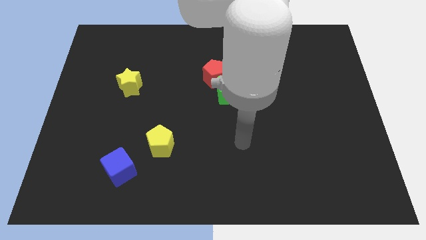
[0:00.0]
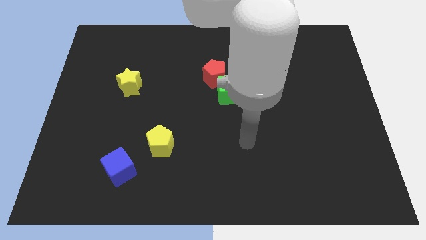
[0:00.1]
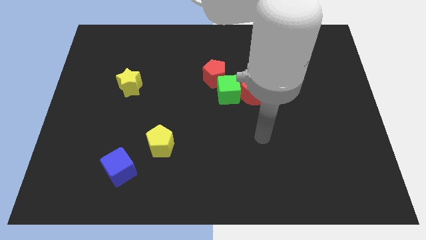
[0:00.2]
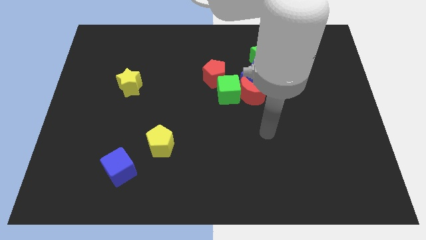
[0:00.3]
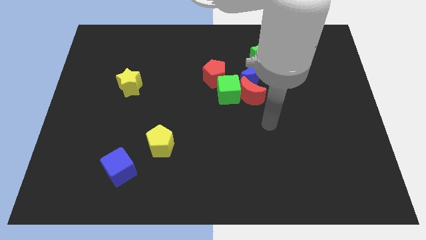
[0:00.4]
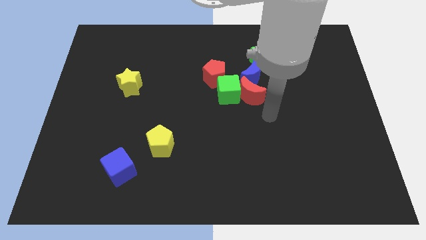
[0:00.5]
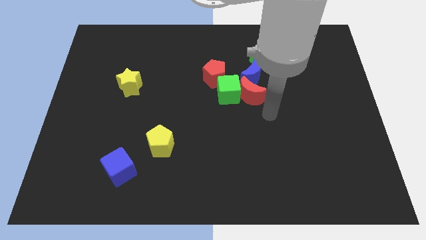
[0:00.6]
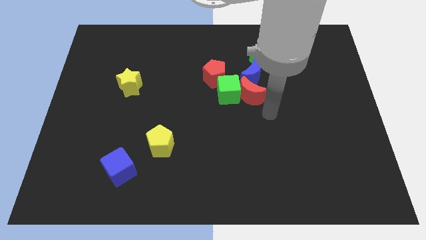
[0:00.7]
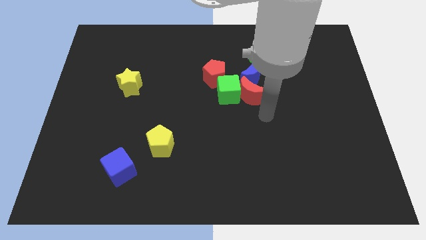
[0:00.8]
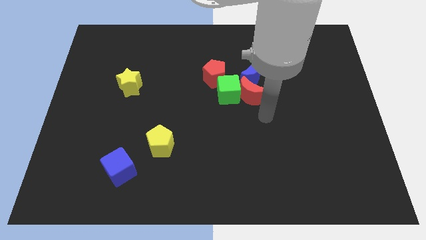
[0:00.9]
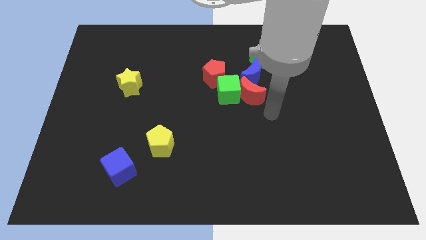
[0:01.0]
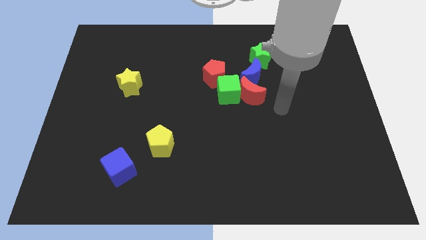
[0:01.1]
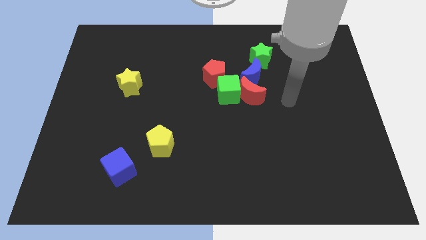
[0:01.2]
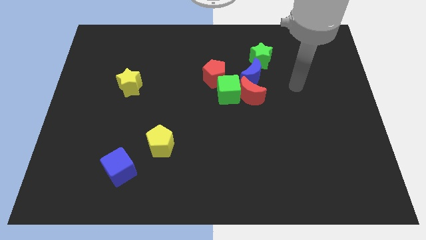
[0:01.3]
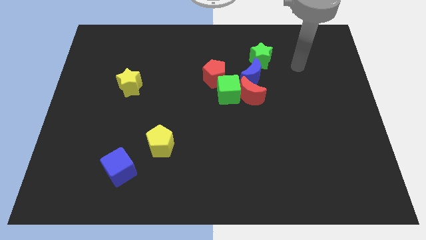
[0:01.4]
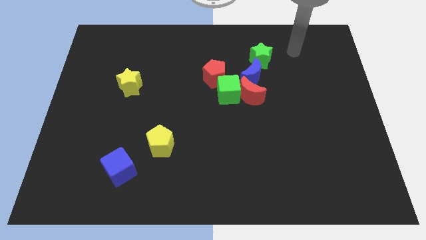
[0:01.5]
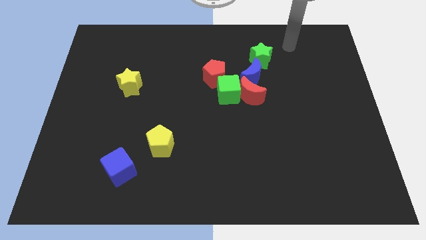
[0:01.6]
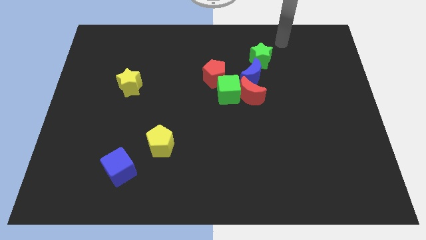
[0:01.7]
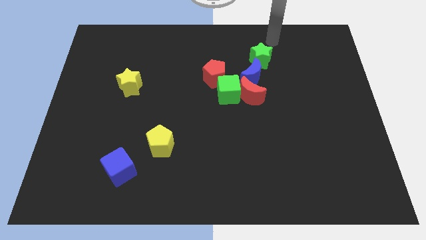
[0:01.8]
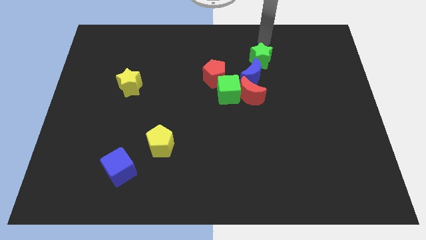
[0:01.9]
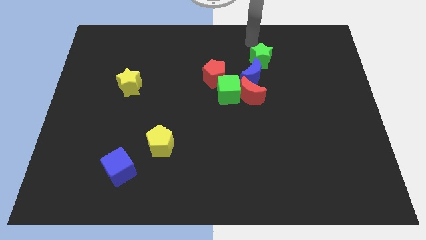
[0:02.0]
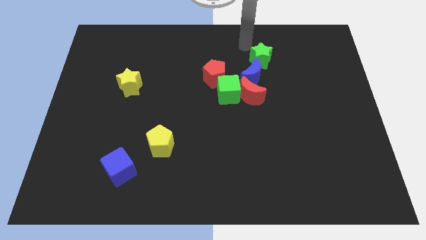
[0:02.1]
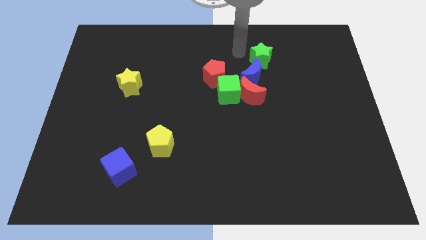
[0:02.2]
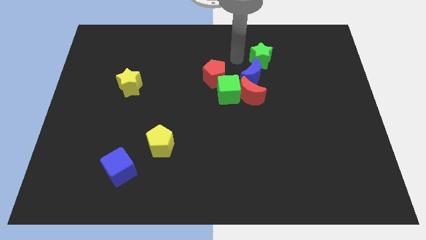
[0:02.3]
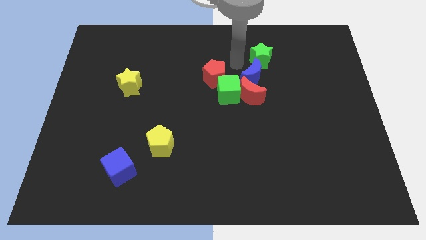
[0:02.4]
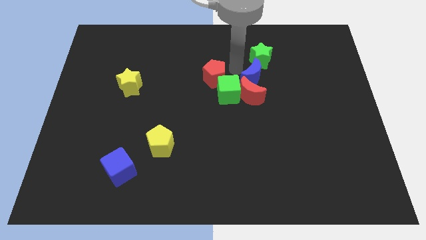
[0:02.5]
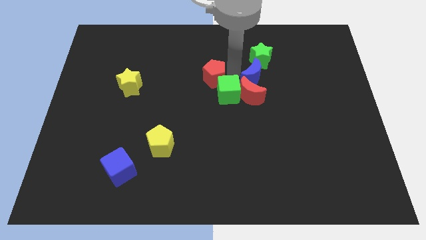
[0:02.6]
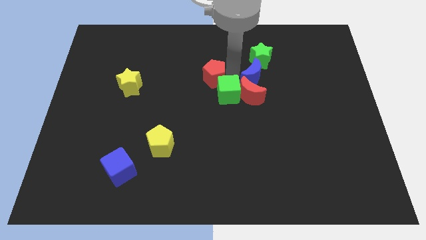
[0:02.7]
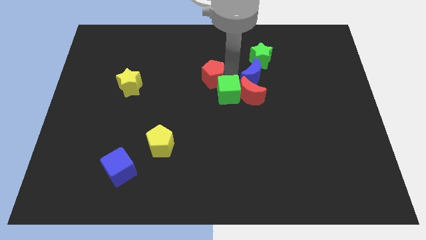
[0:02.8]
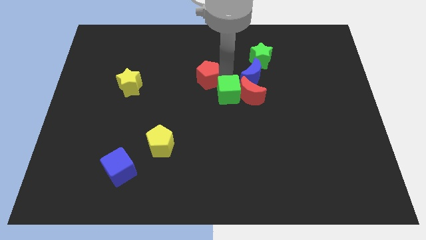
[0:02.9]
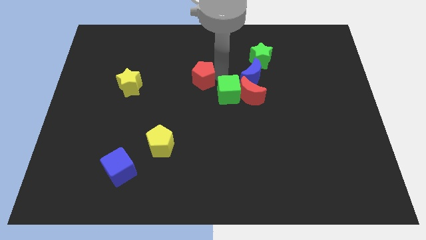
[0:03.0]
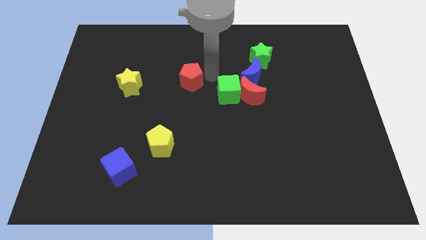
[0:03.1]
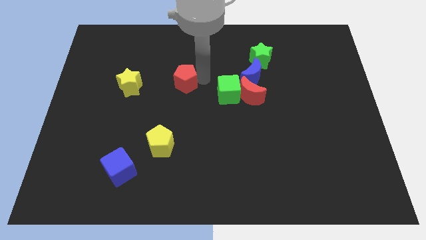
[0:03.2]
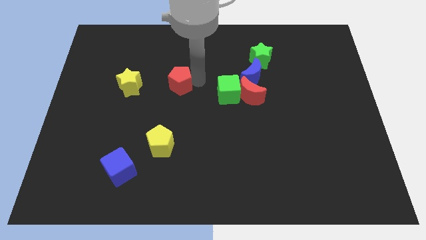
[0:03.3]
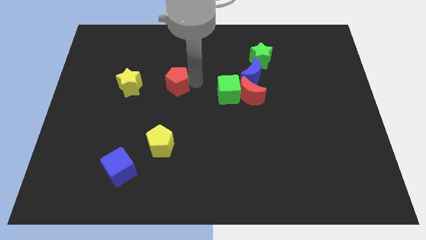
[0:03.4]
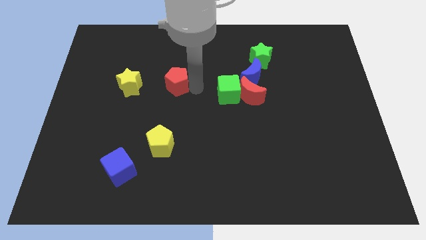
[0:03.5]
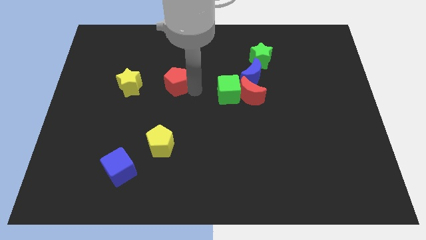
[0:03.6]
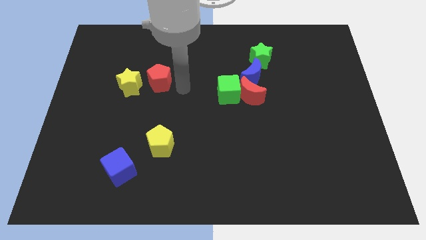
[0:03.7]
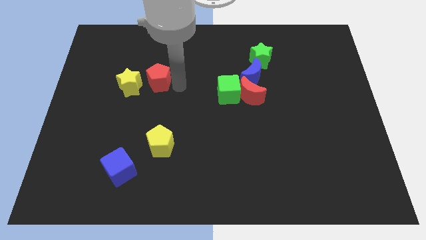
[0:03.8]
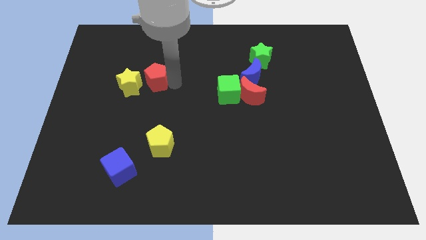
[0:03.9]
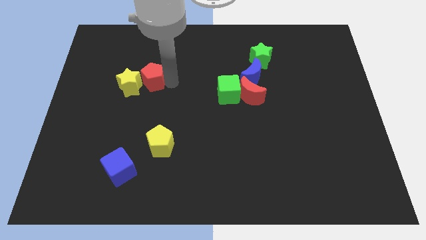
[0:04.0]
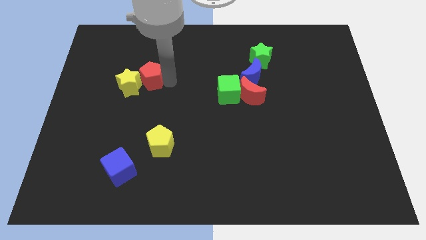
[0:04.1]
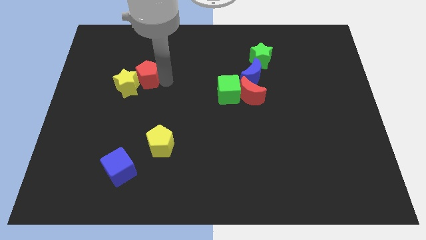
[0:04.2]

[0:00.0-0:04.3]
push the red pentagon next to the yellow star

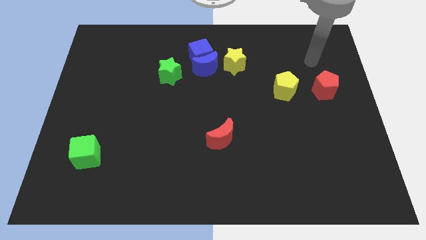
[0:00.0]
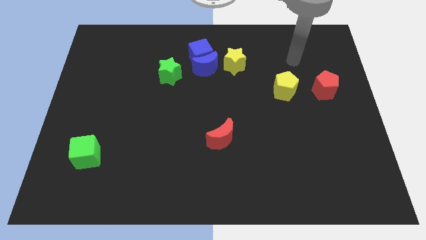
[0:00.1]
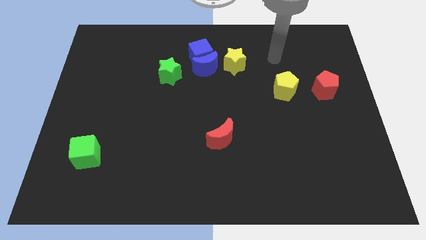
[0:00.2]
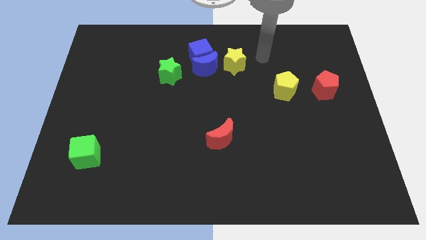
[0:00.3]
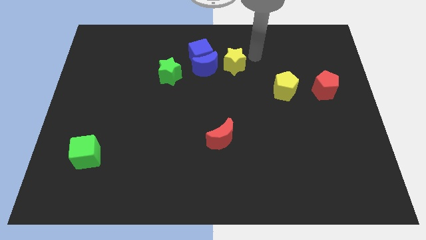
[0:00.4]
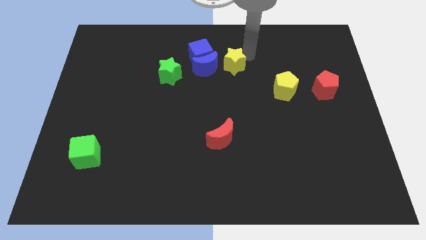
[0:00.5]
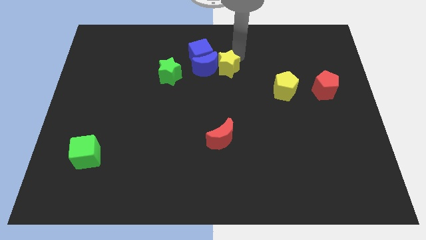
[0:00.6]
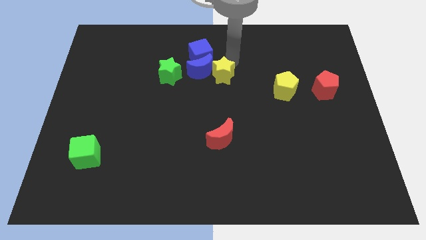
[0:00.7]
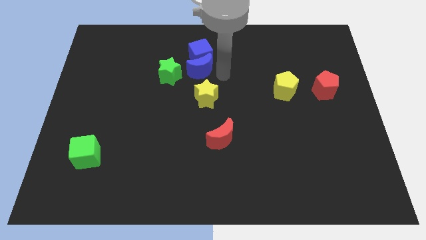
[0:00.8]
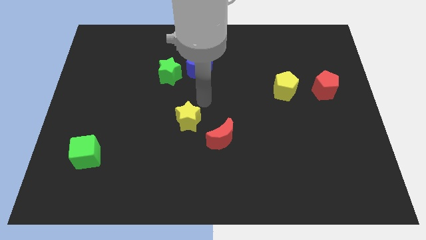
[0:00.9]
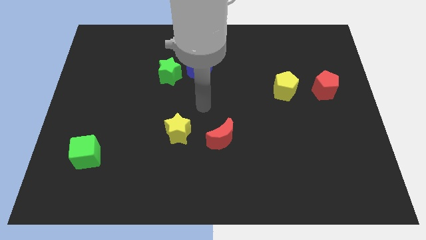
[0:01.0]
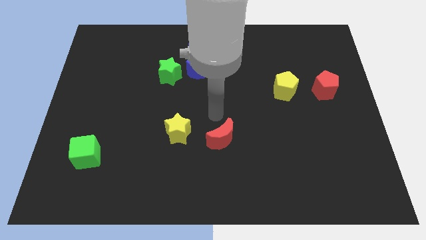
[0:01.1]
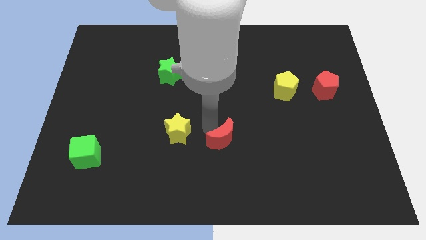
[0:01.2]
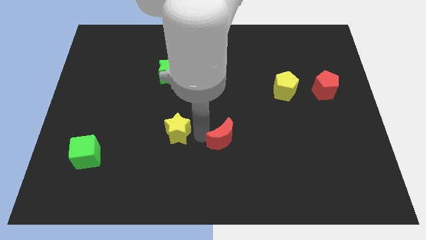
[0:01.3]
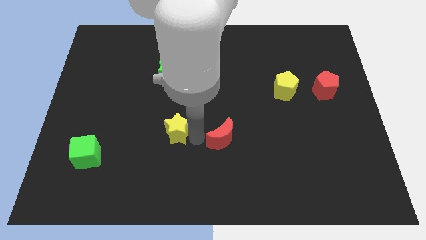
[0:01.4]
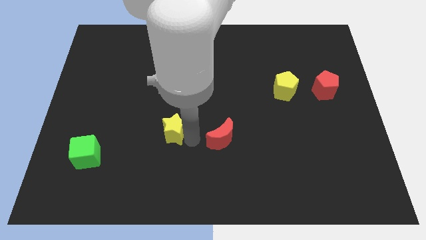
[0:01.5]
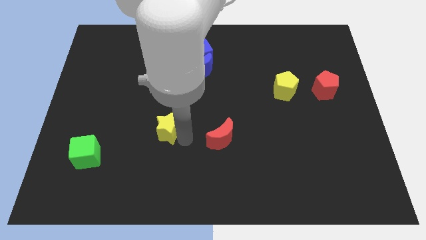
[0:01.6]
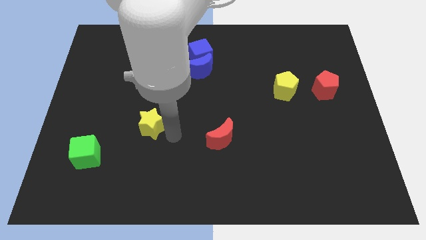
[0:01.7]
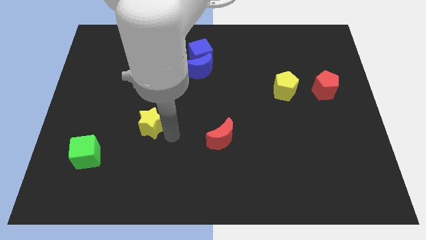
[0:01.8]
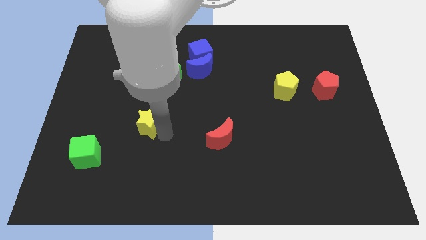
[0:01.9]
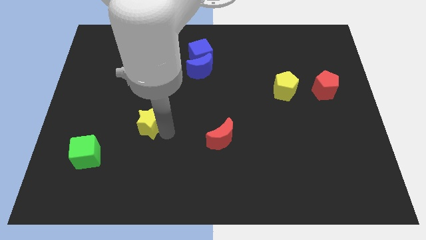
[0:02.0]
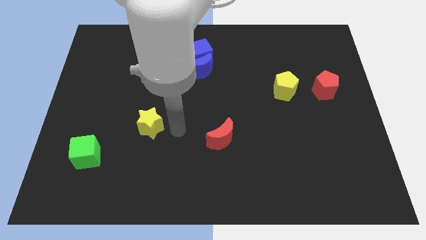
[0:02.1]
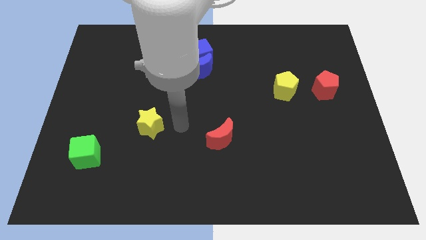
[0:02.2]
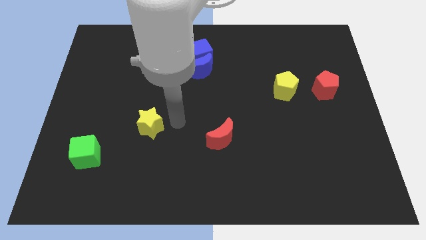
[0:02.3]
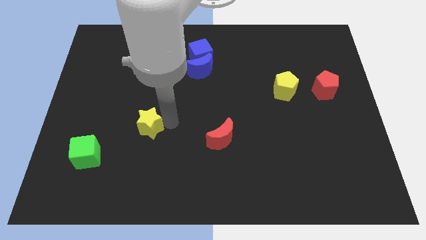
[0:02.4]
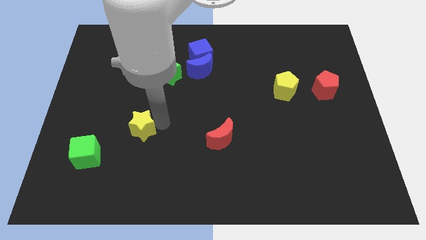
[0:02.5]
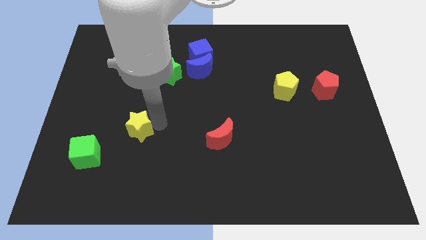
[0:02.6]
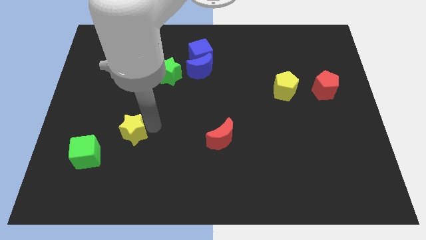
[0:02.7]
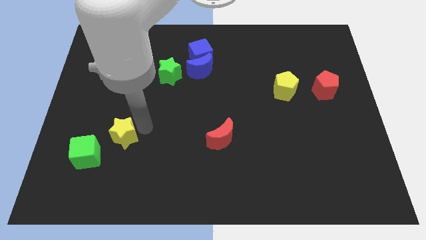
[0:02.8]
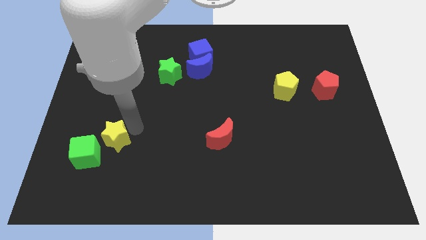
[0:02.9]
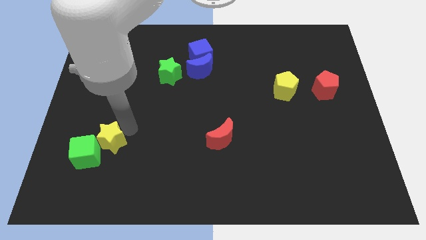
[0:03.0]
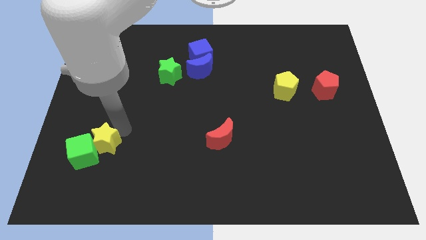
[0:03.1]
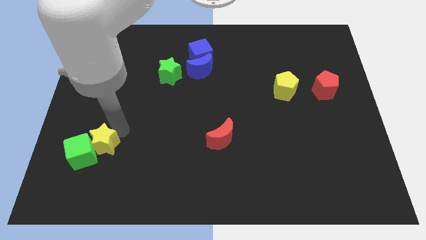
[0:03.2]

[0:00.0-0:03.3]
put the yellow star to the green cube

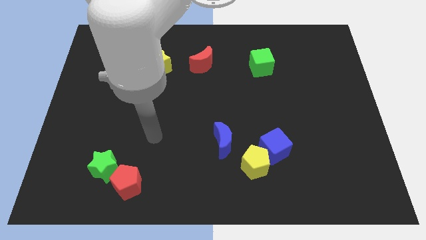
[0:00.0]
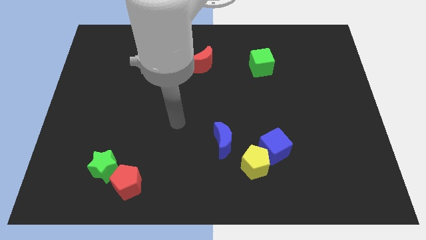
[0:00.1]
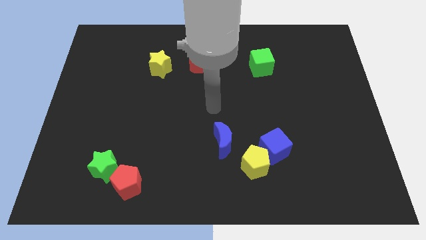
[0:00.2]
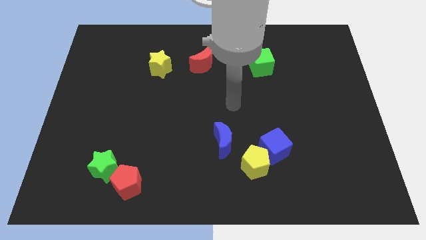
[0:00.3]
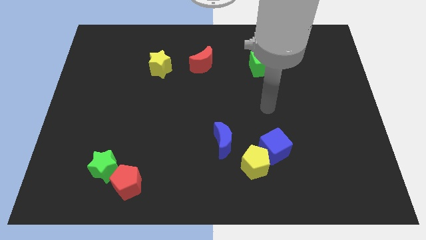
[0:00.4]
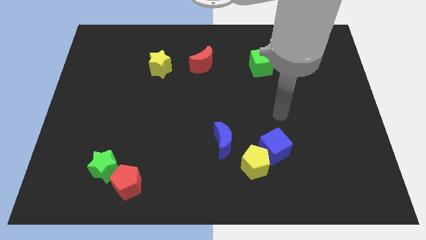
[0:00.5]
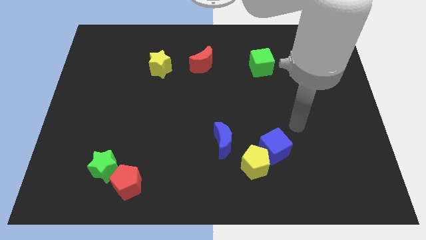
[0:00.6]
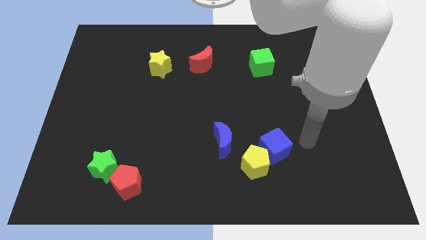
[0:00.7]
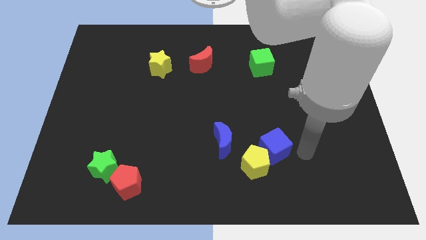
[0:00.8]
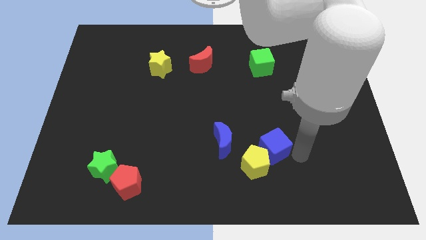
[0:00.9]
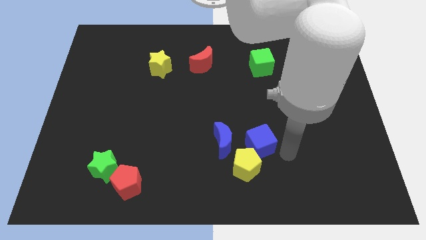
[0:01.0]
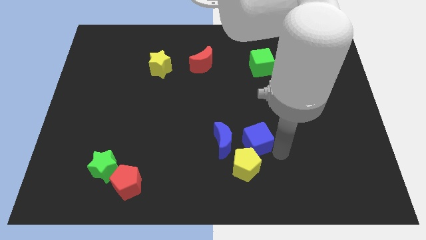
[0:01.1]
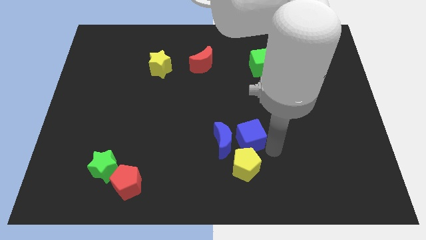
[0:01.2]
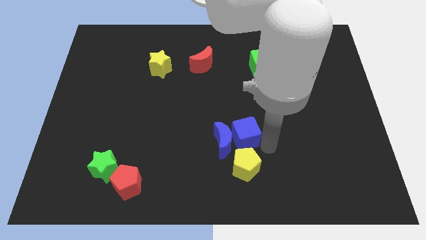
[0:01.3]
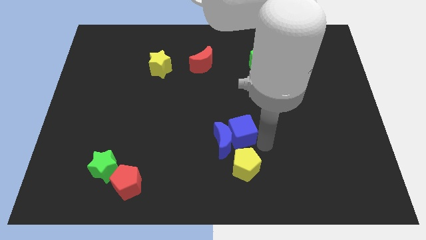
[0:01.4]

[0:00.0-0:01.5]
put the blue cube towards the blue moon
